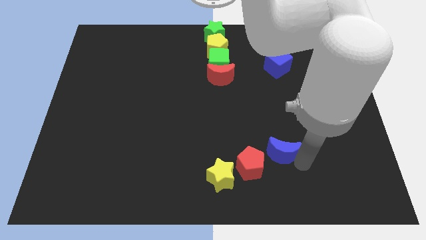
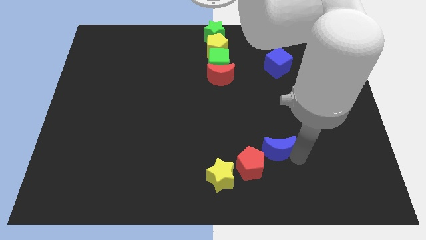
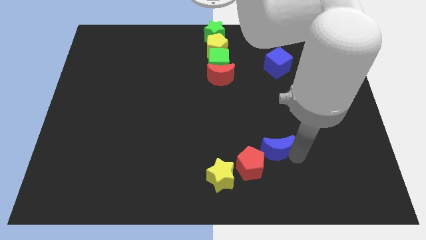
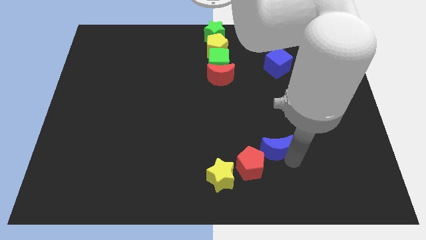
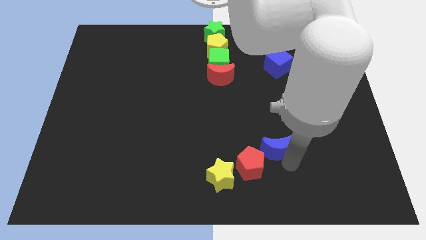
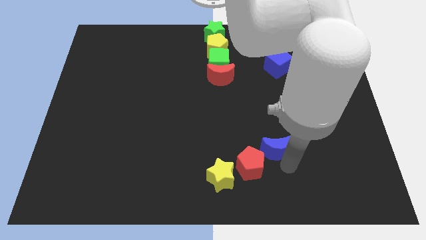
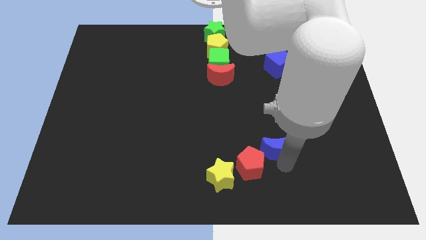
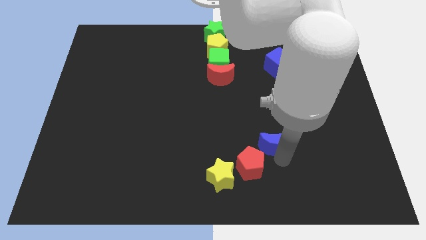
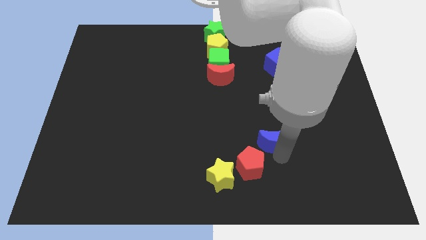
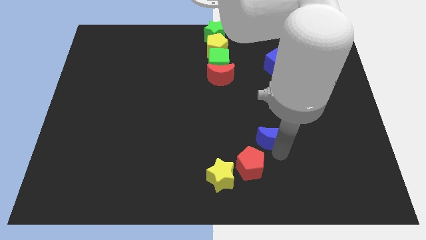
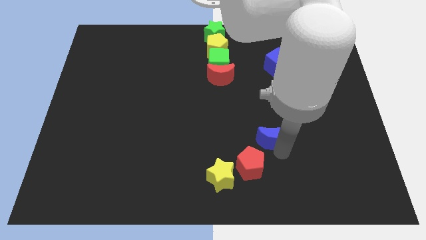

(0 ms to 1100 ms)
push the blue crescent slightly to the top

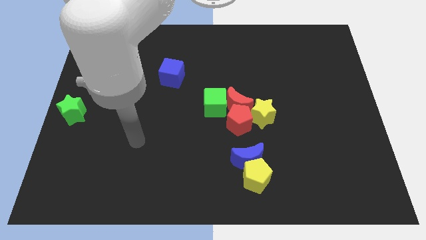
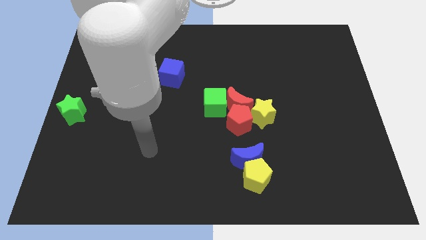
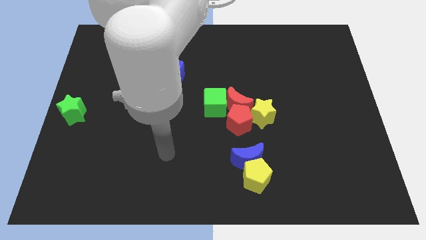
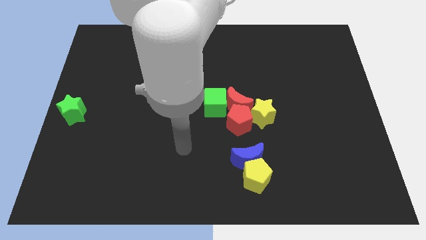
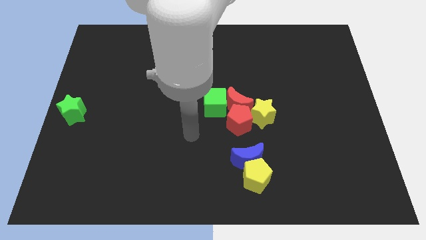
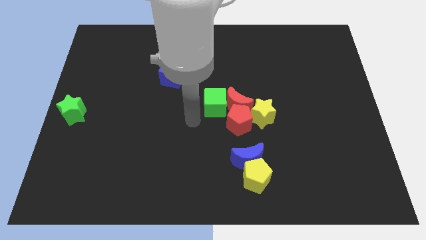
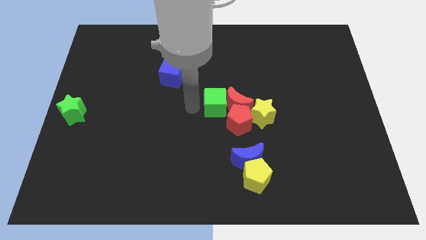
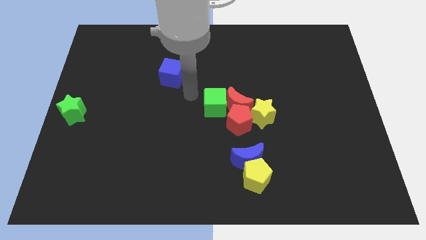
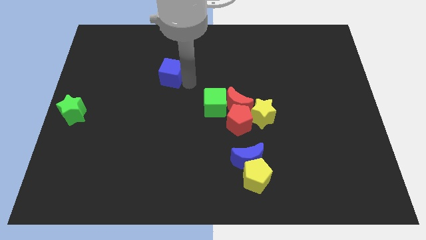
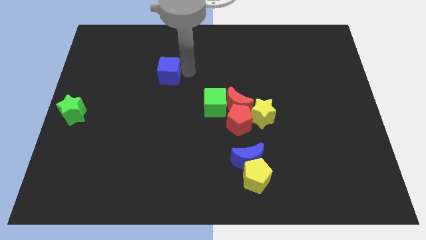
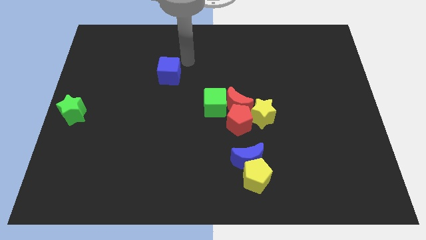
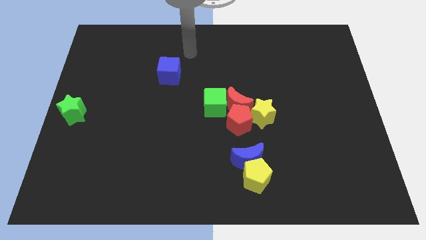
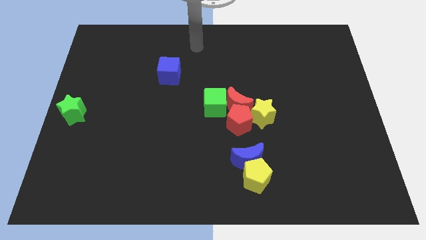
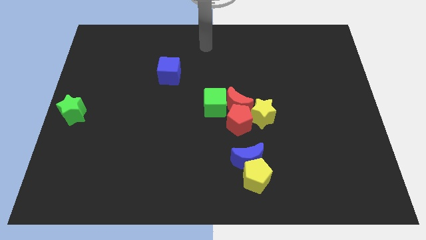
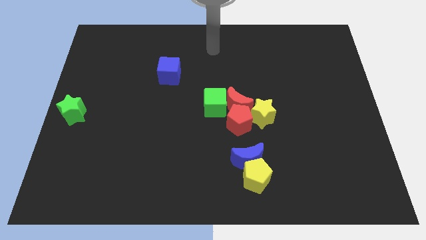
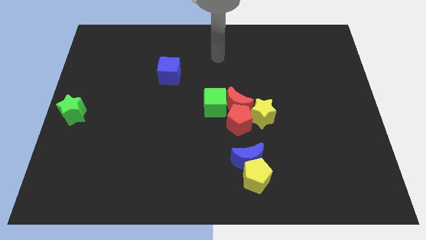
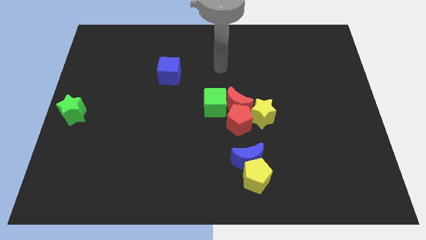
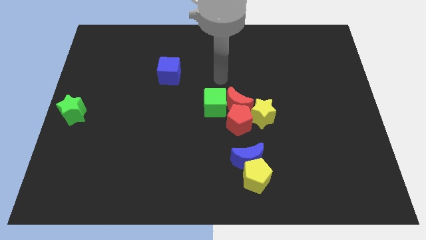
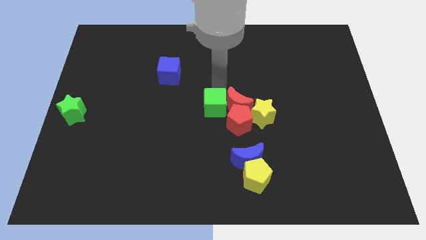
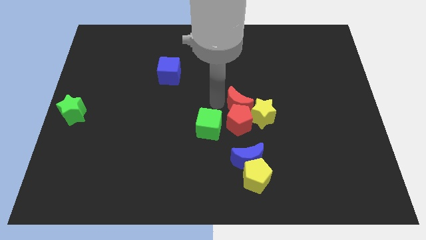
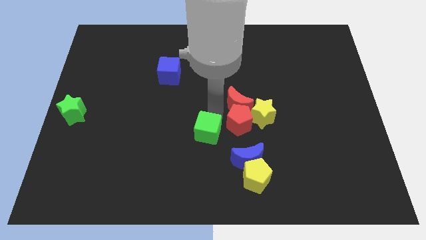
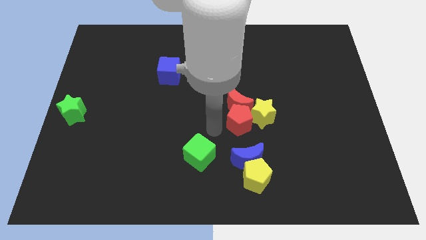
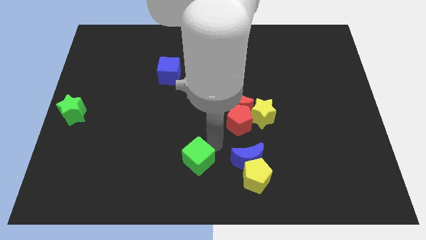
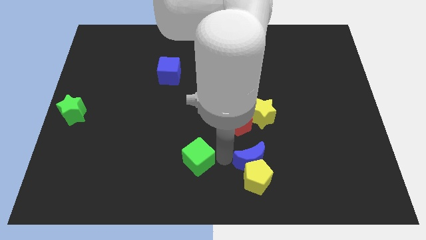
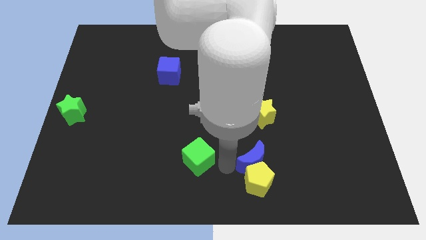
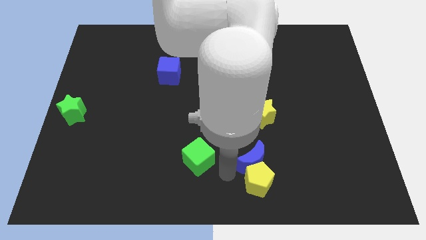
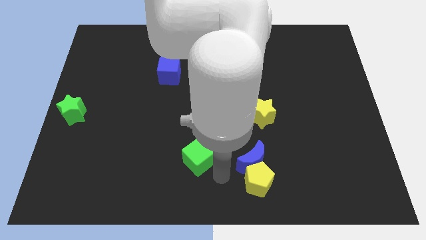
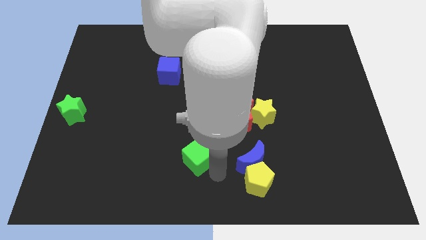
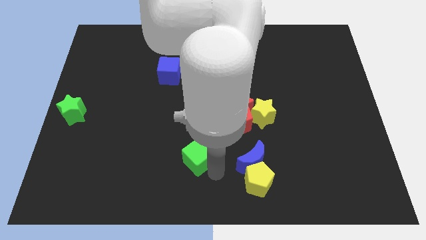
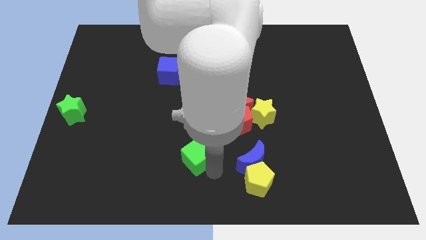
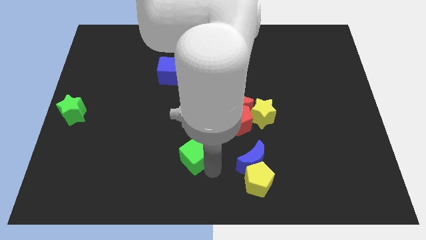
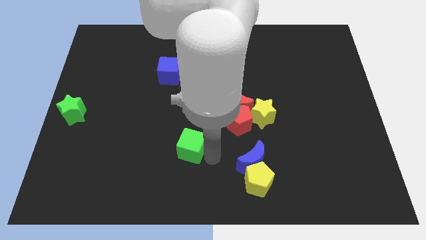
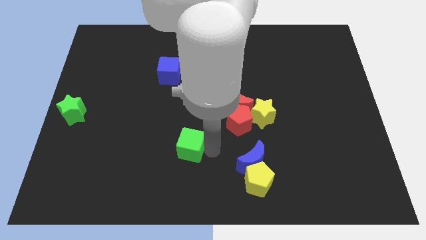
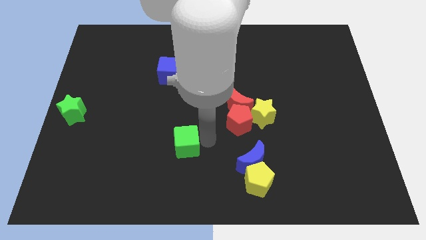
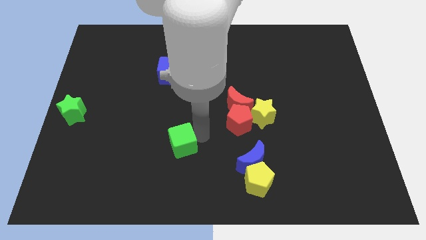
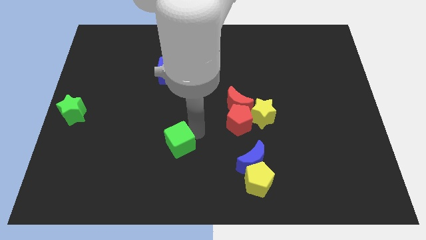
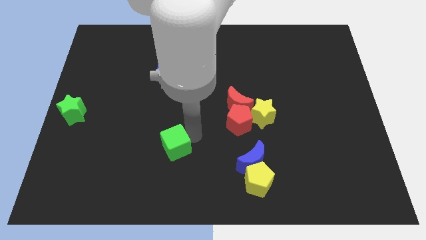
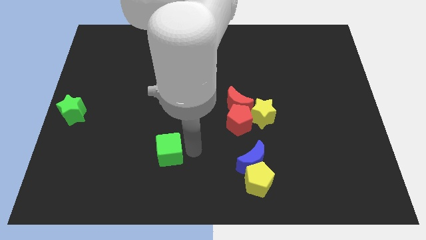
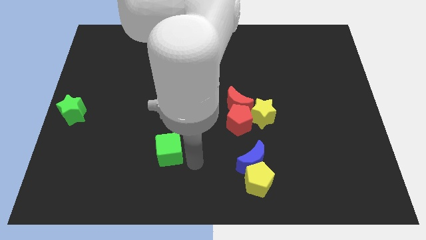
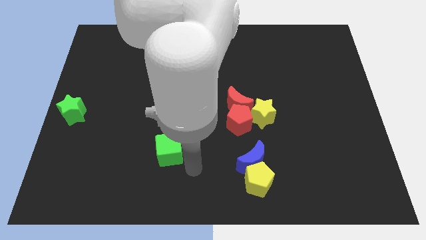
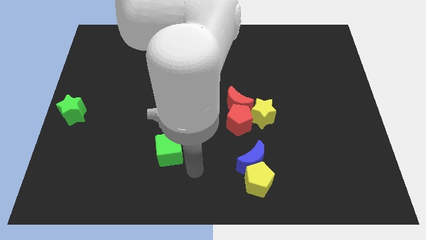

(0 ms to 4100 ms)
move the green cube parallel to the blue crescent

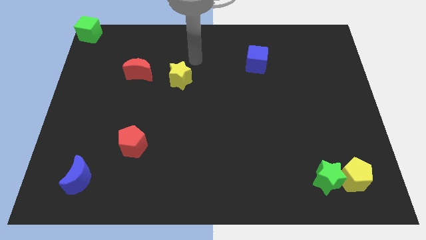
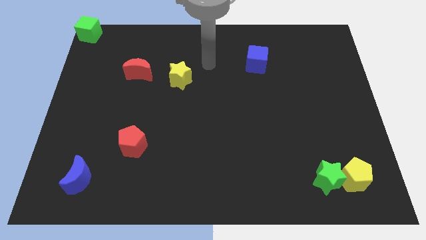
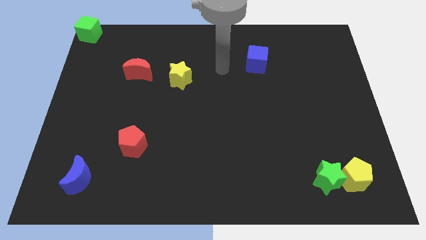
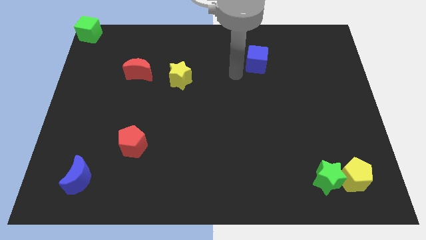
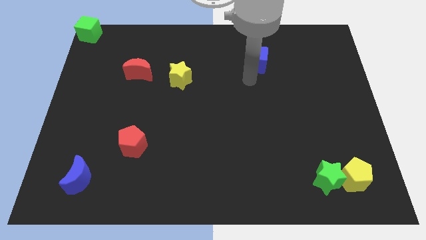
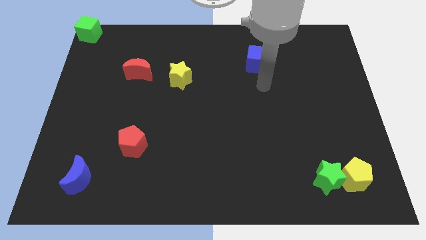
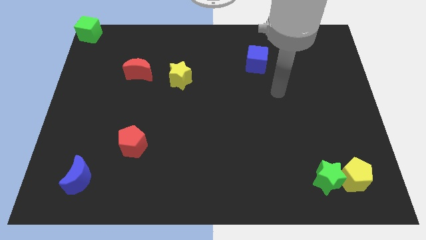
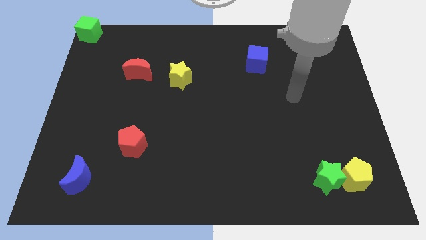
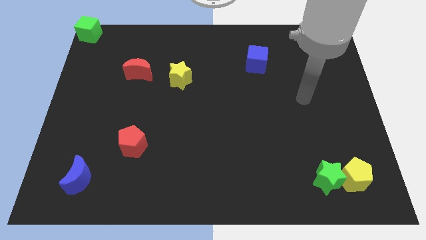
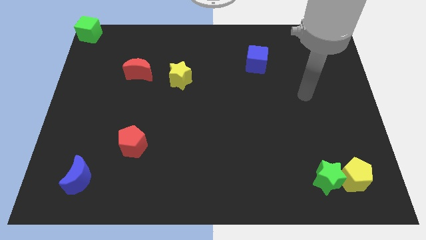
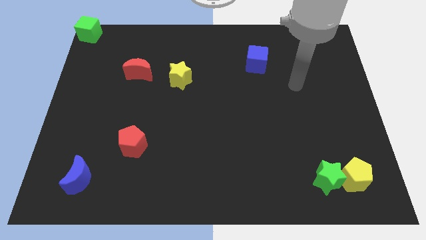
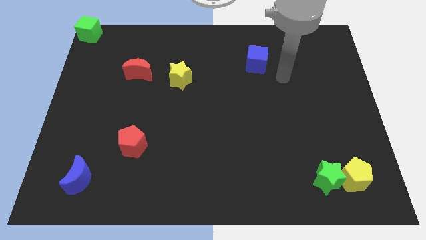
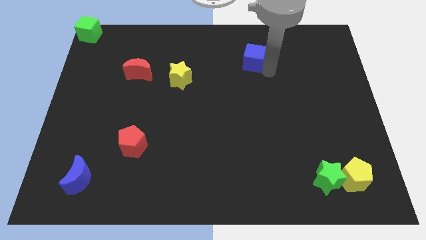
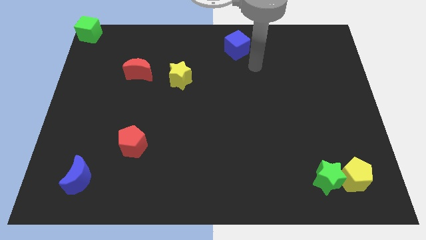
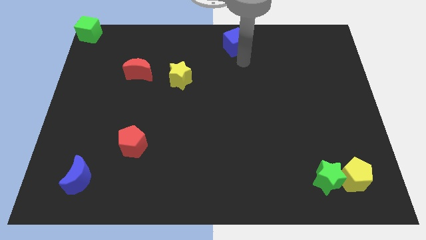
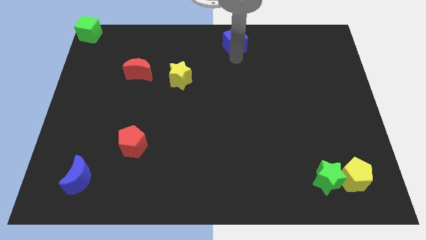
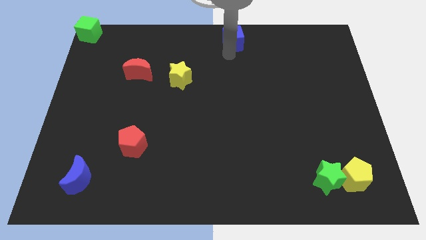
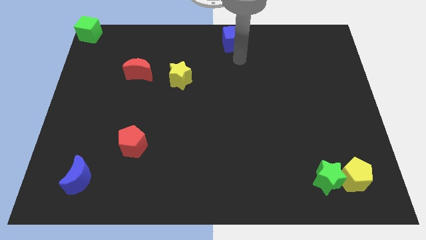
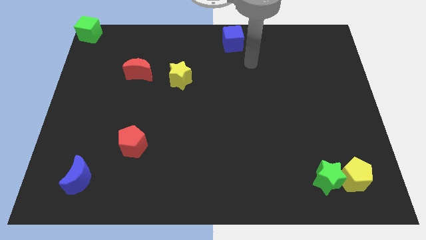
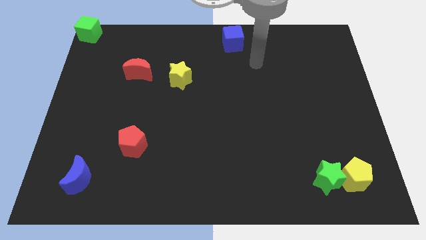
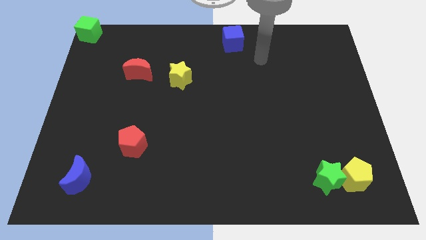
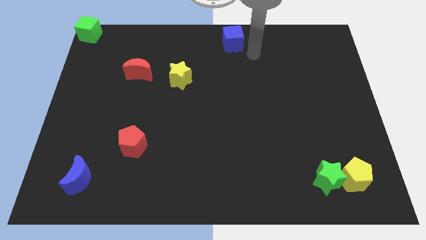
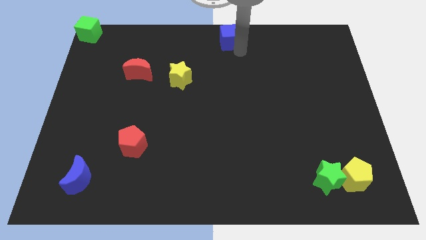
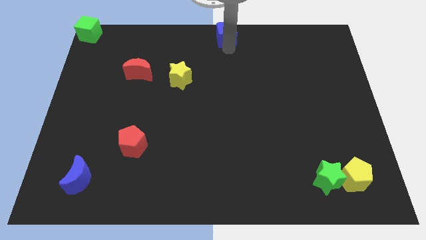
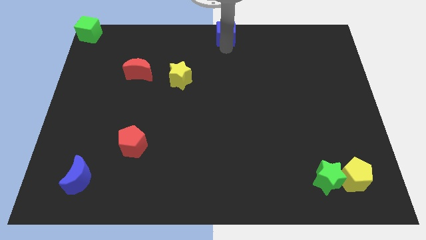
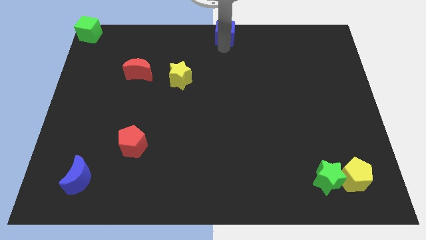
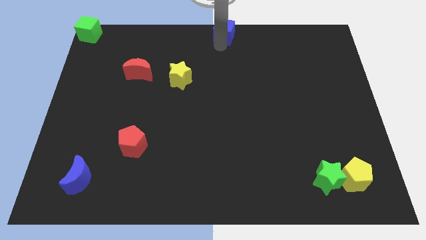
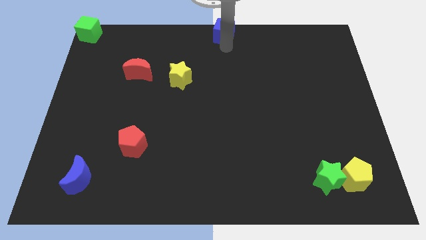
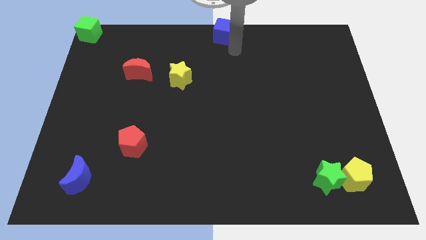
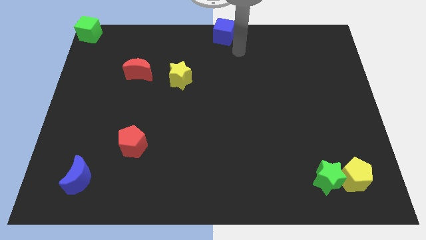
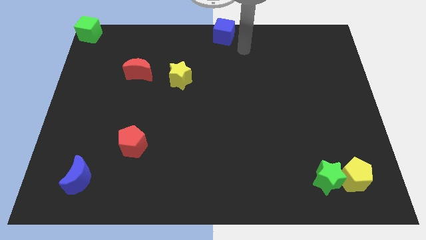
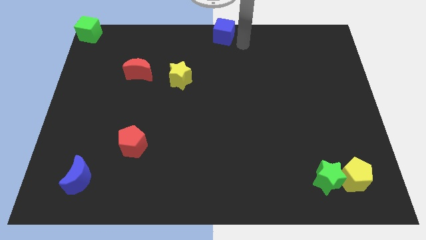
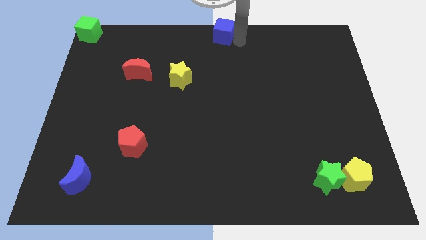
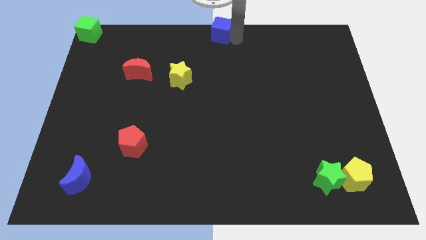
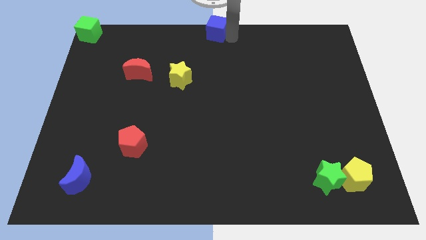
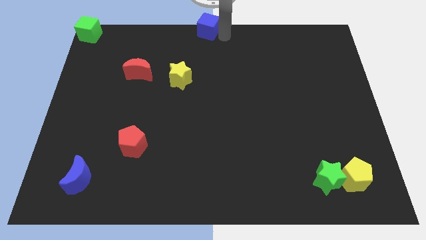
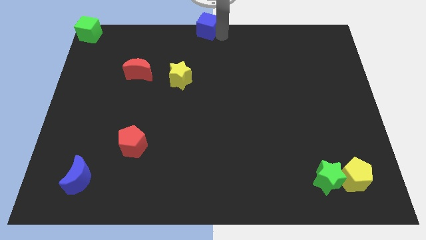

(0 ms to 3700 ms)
push the blue cube on middle top of the board

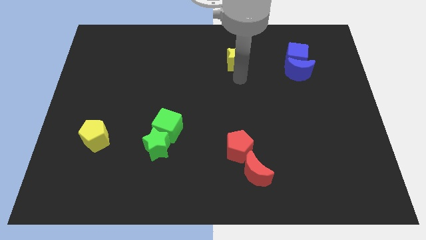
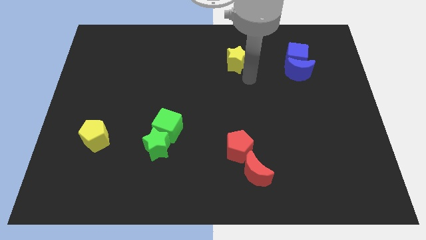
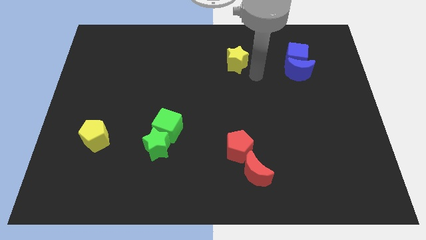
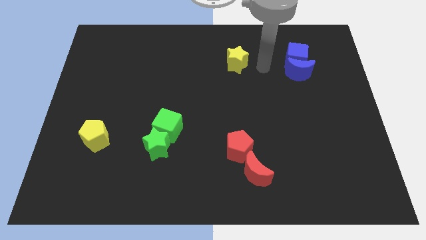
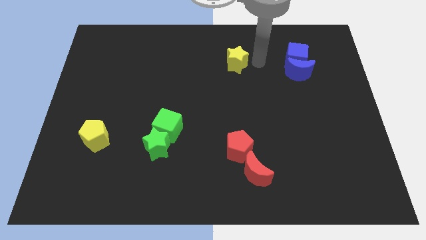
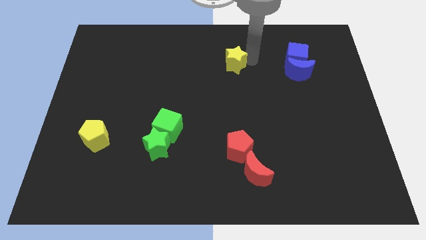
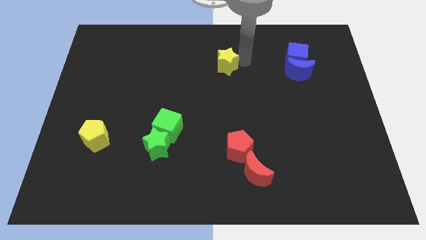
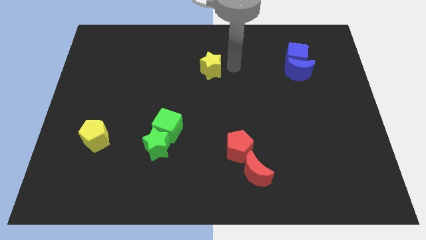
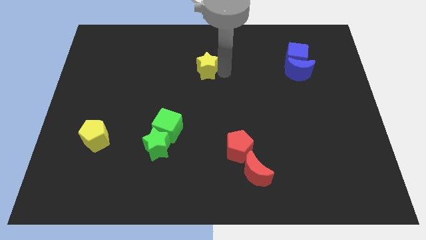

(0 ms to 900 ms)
move the yellow star to the center of the board
